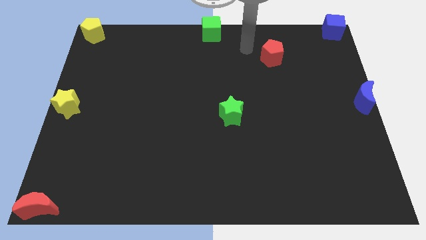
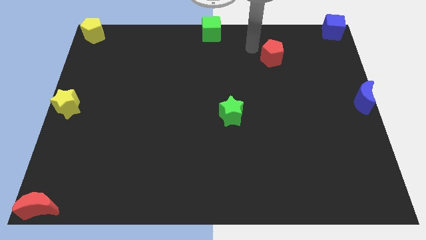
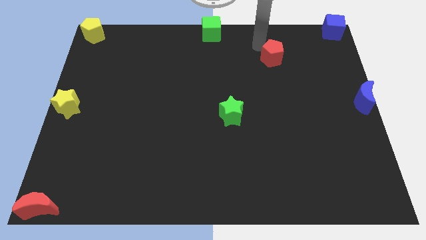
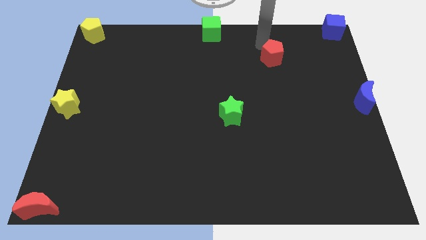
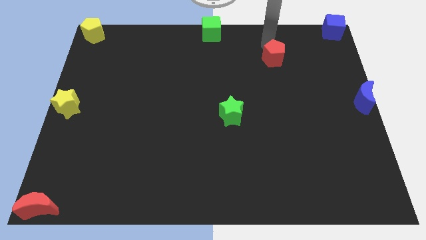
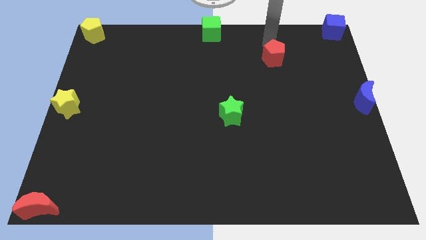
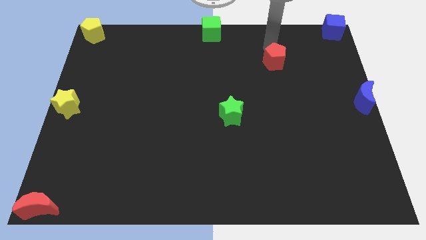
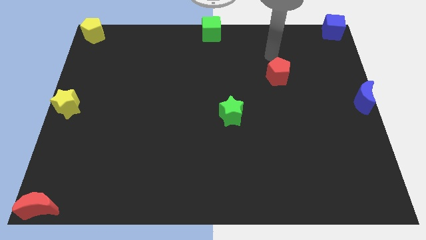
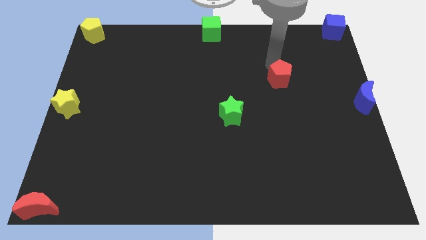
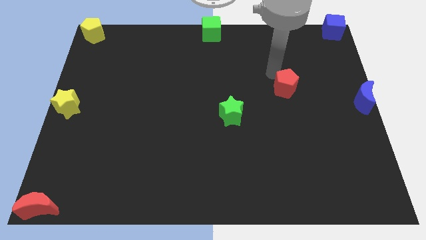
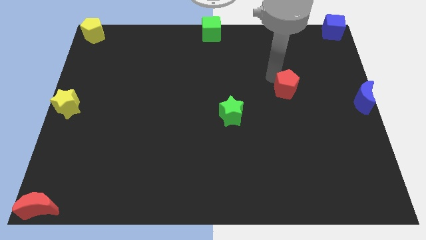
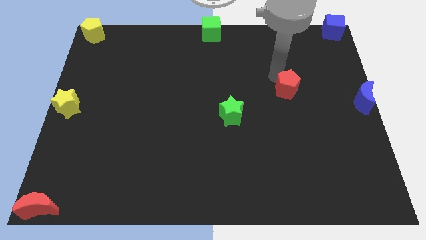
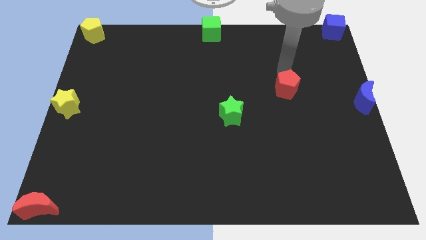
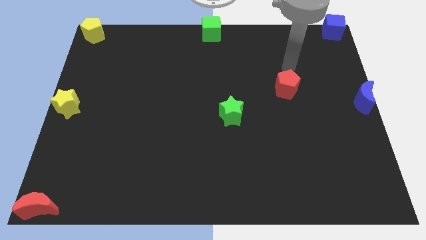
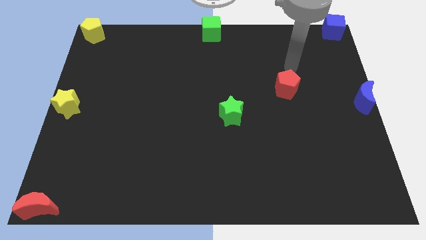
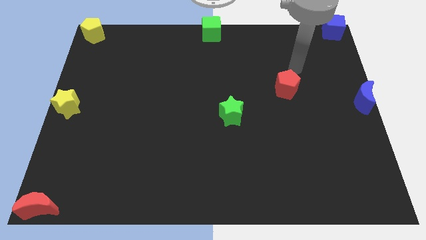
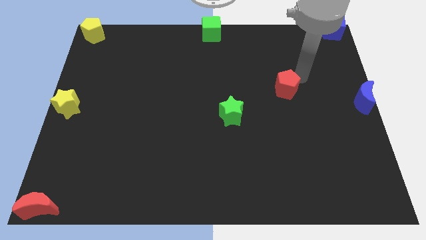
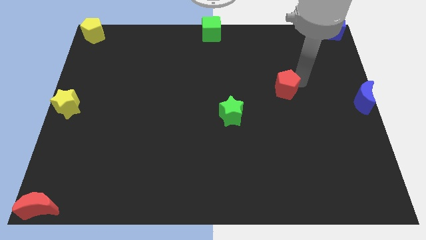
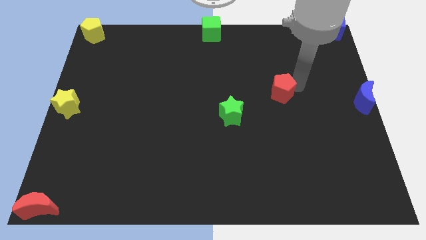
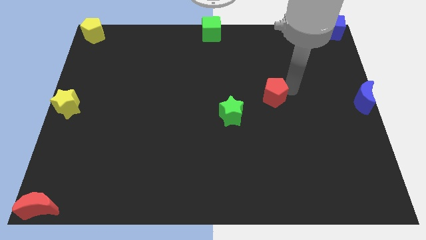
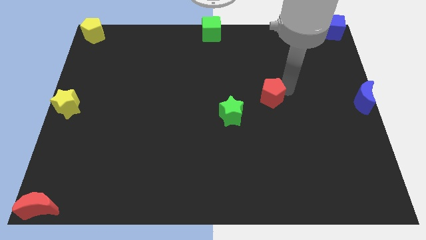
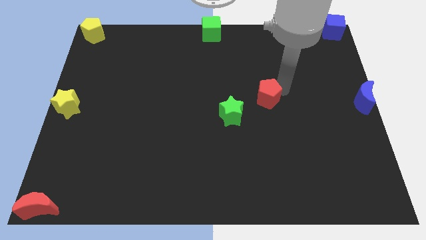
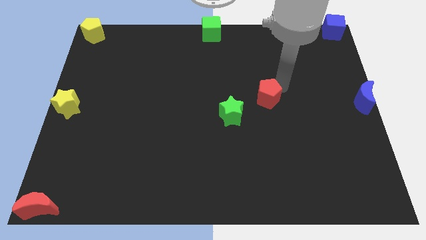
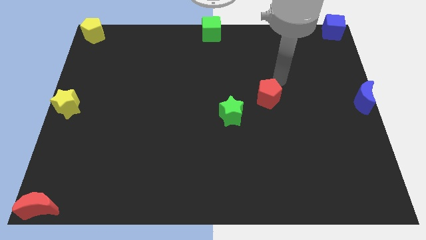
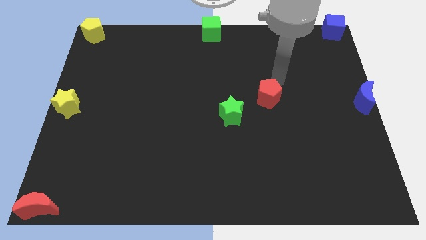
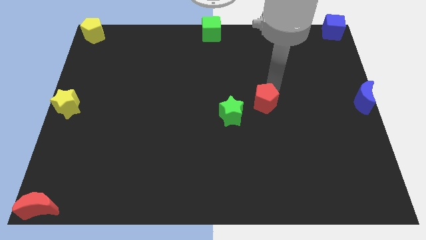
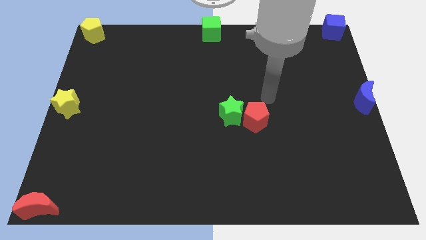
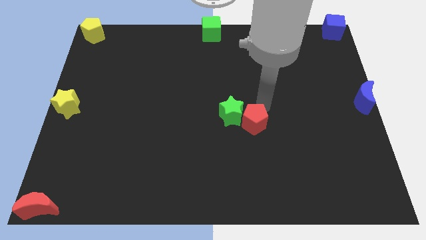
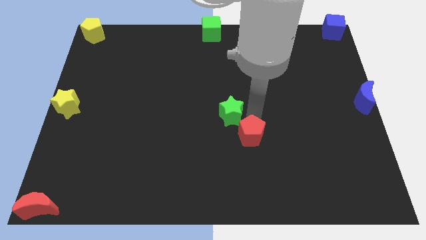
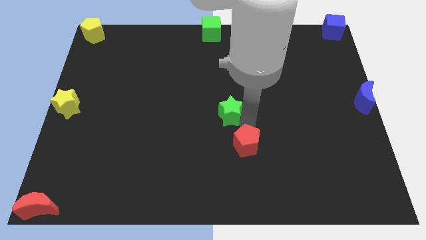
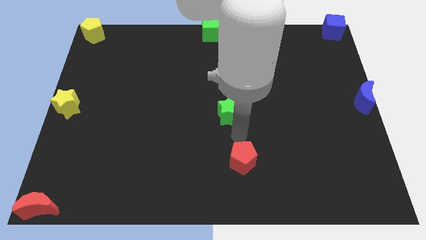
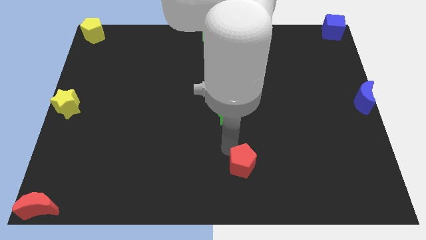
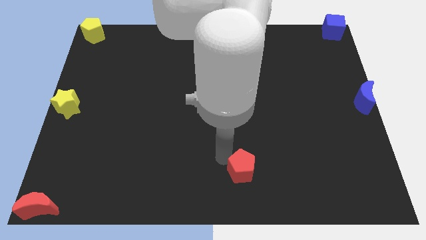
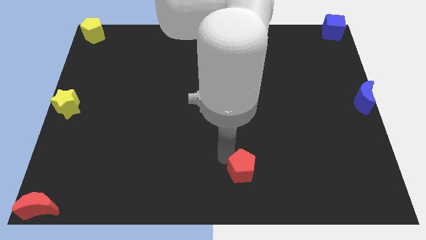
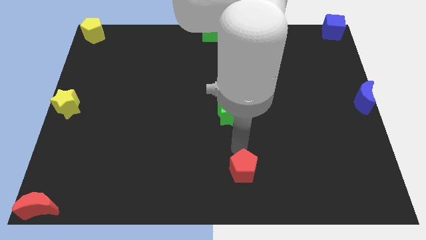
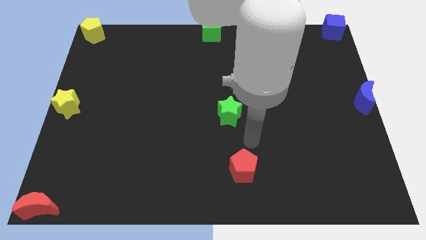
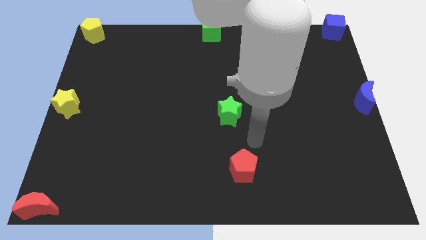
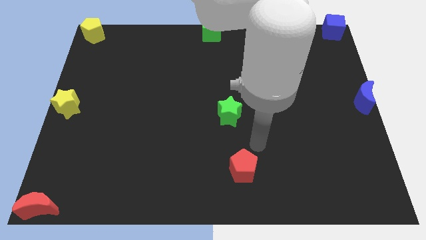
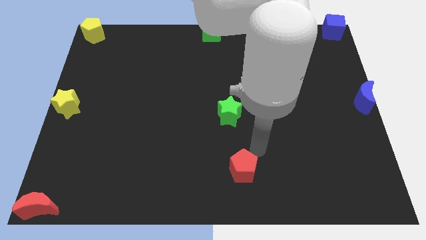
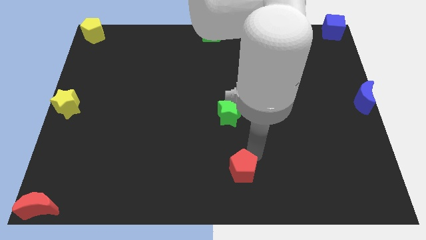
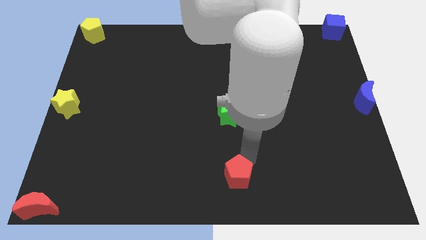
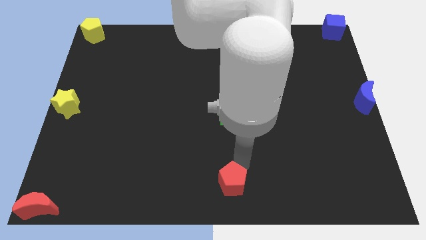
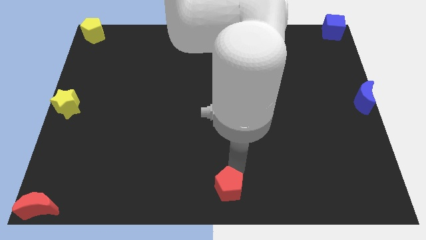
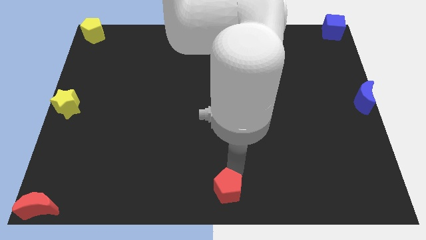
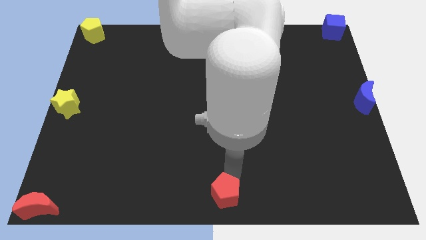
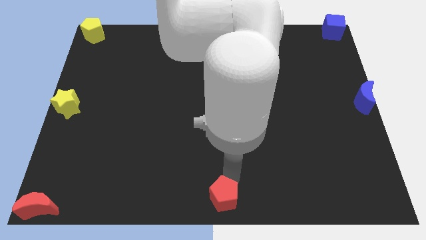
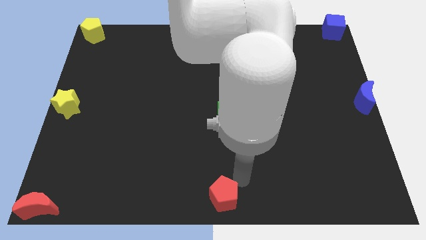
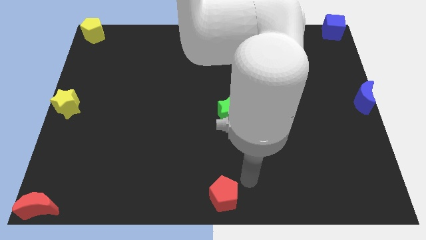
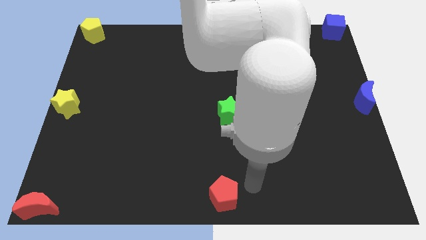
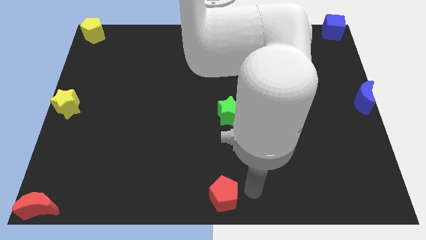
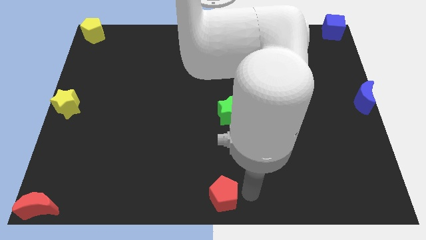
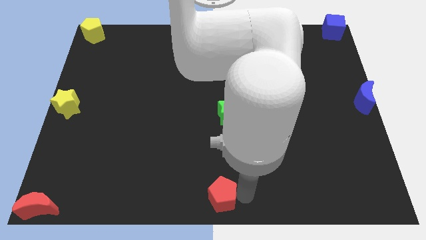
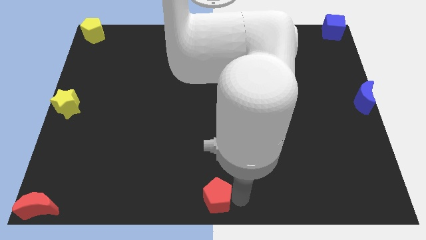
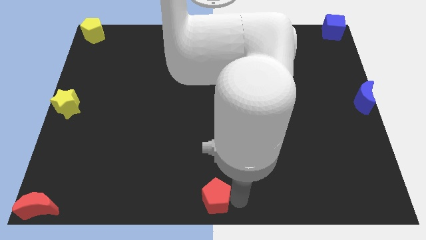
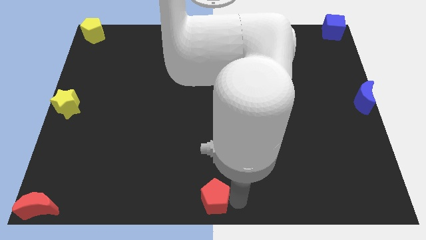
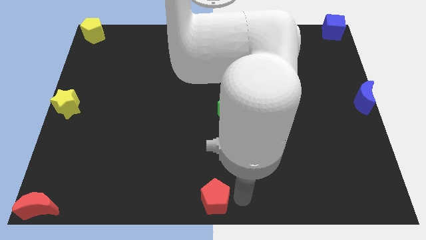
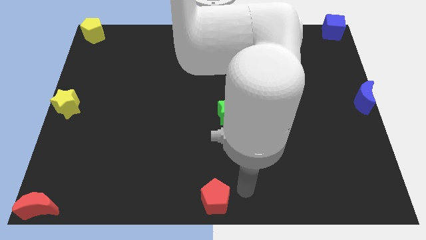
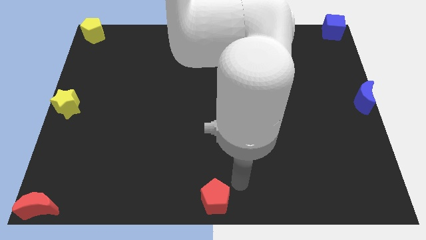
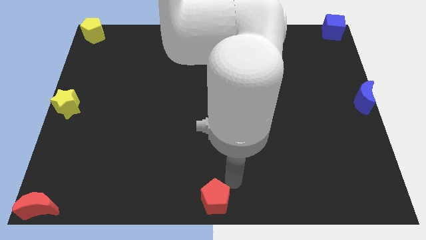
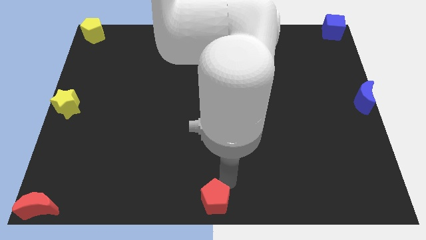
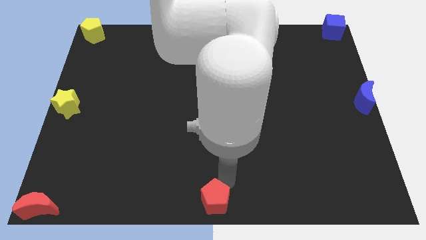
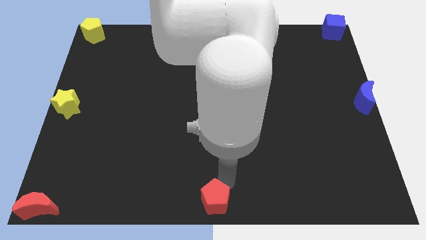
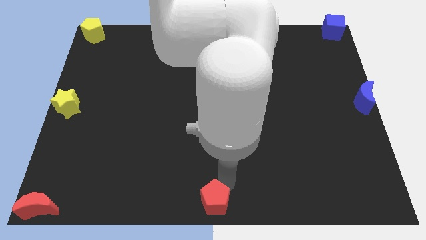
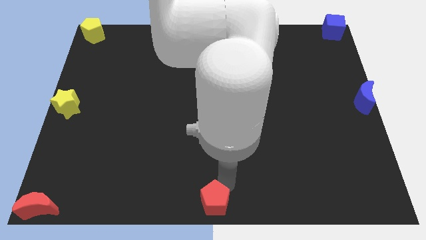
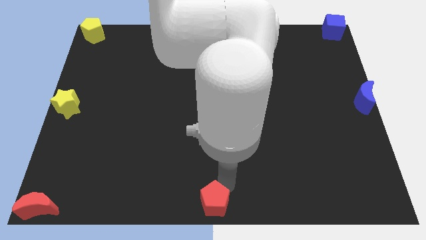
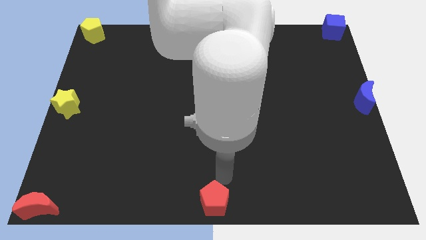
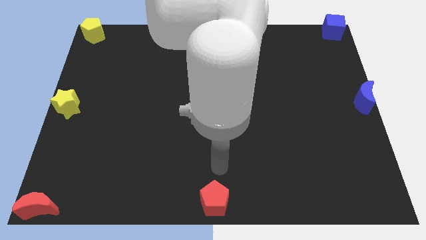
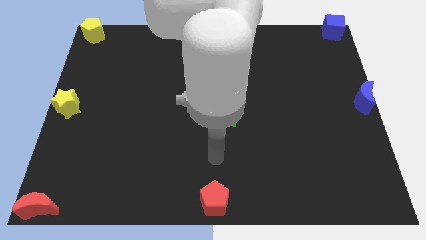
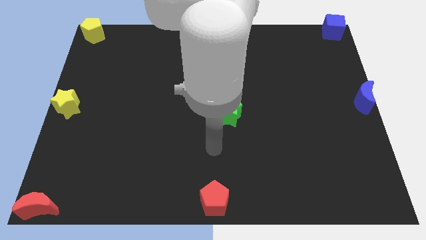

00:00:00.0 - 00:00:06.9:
move the red pentagon to the bottom center of the board

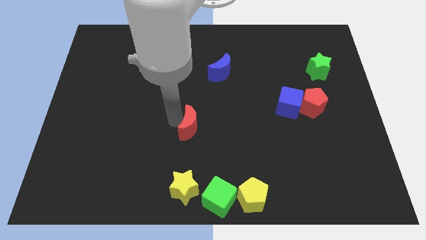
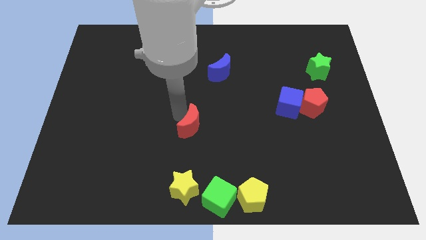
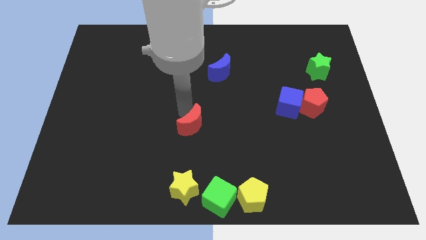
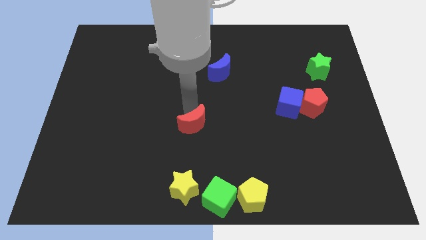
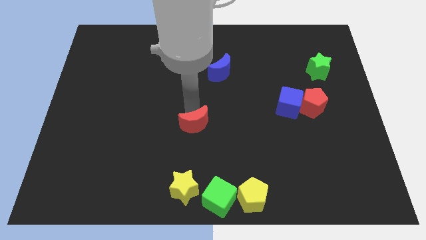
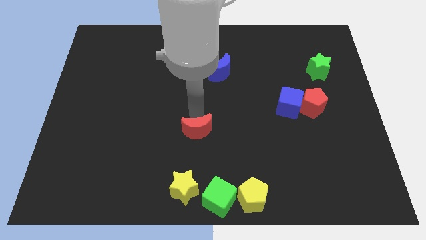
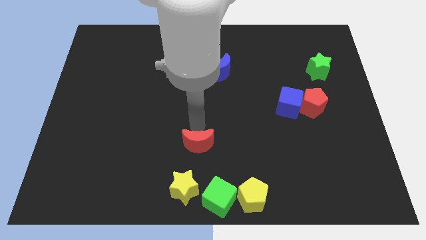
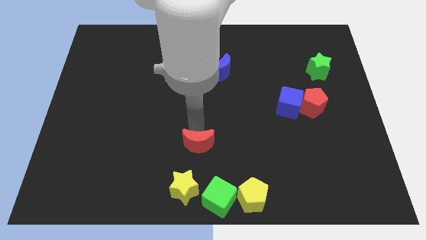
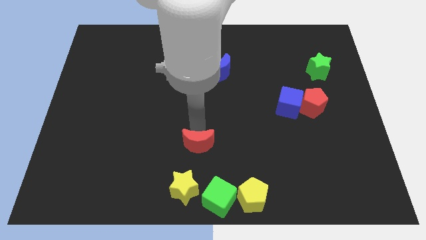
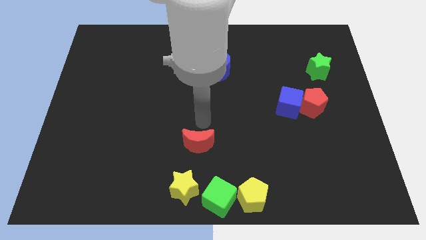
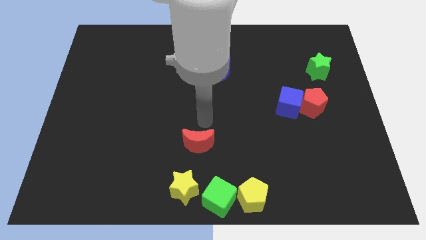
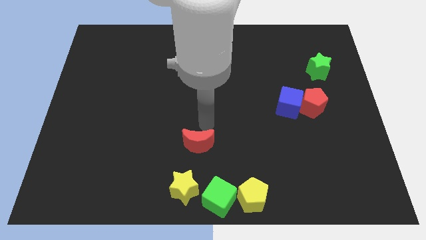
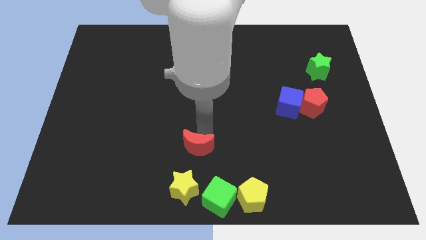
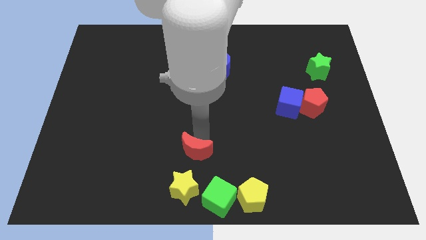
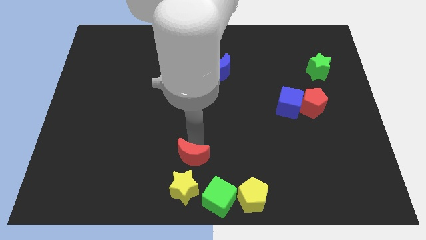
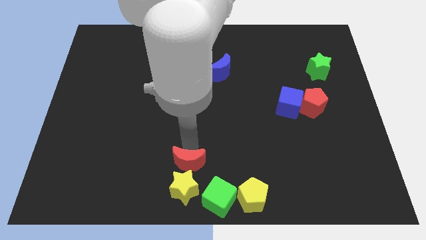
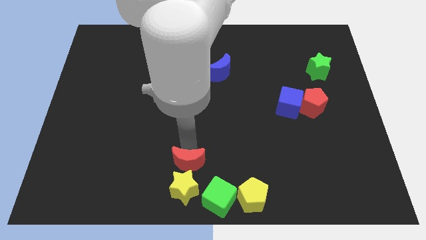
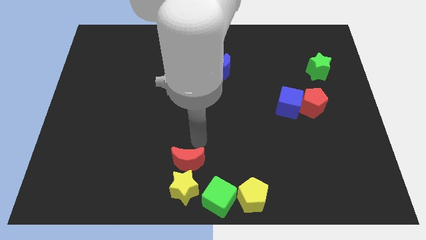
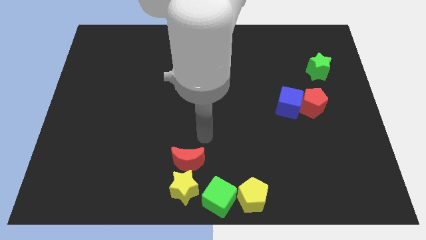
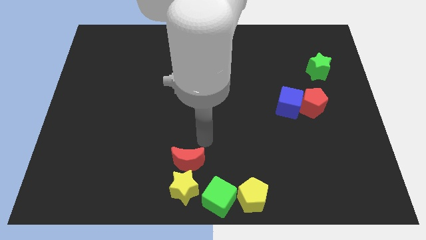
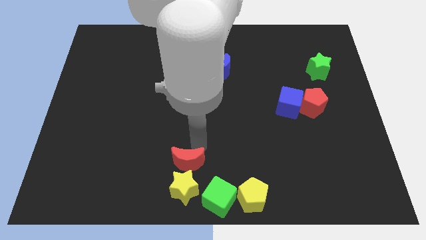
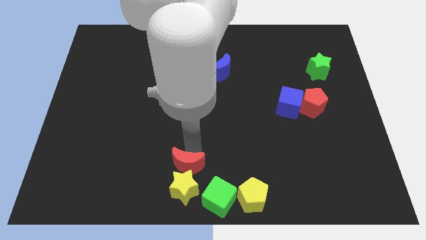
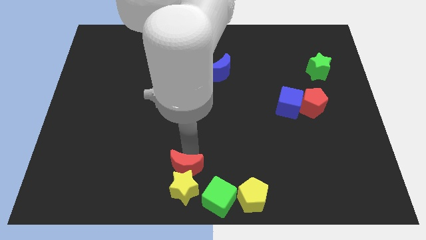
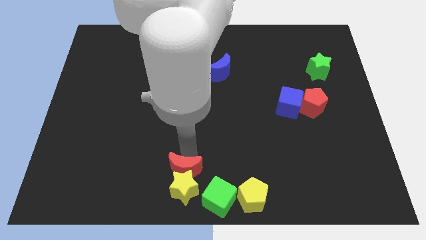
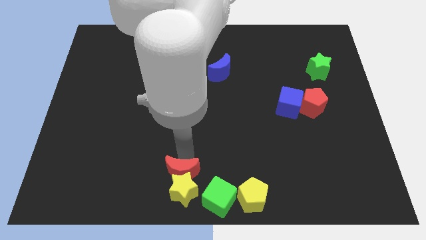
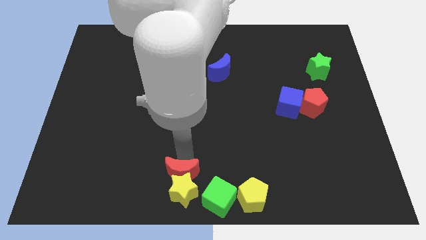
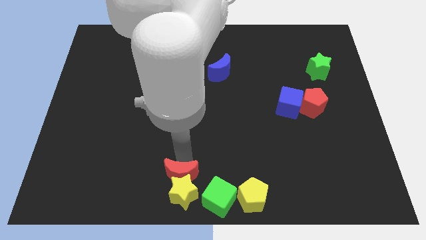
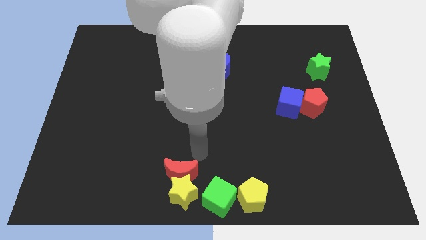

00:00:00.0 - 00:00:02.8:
push the red crescent into yellow star
